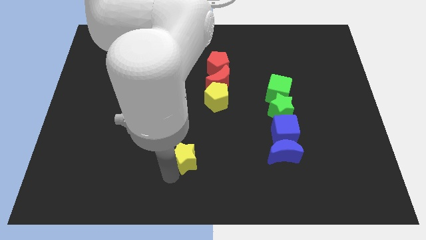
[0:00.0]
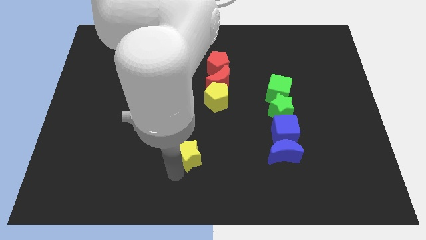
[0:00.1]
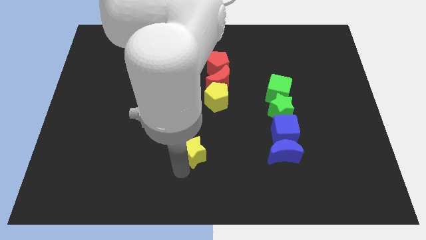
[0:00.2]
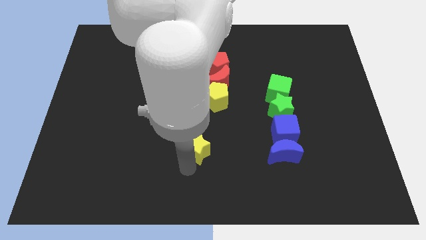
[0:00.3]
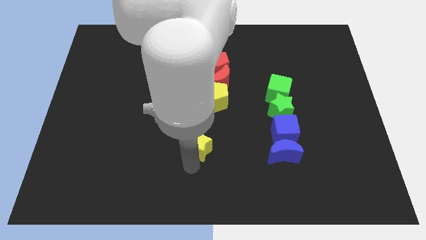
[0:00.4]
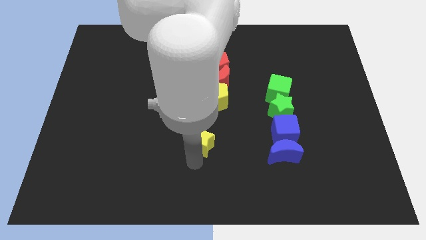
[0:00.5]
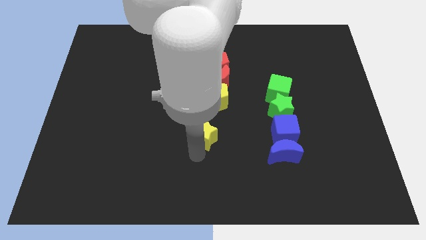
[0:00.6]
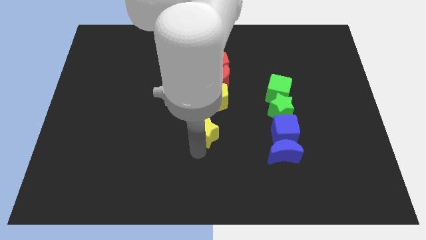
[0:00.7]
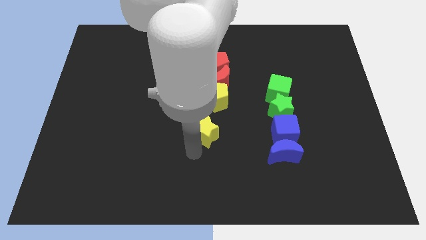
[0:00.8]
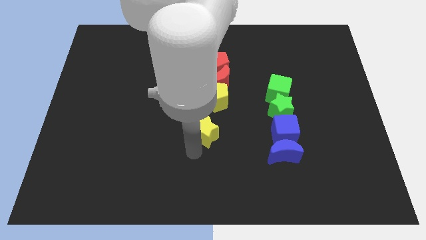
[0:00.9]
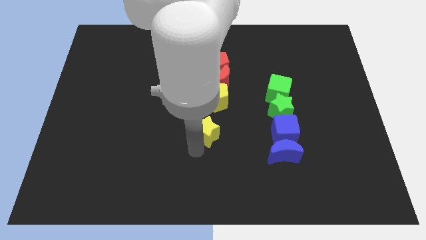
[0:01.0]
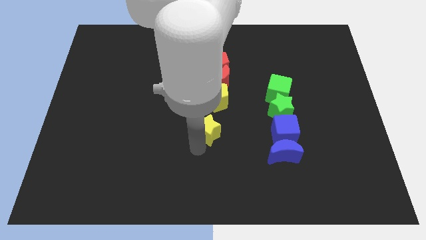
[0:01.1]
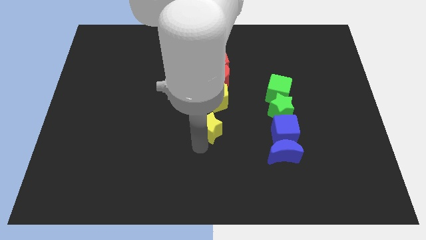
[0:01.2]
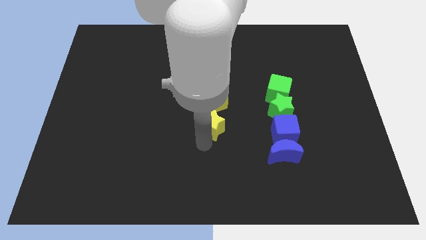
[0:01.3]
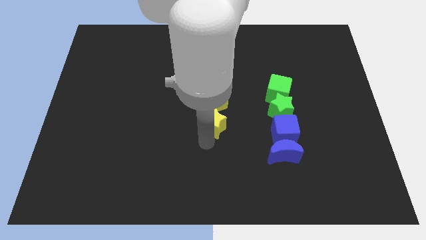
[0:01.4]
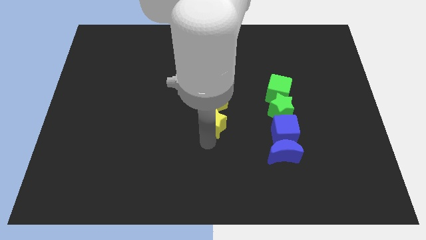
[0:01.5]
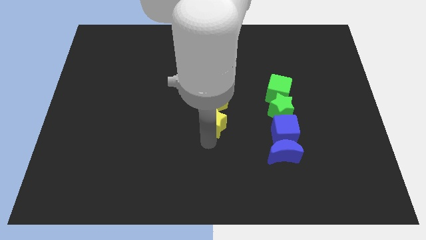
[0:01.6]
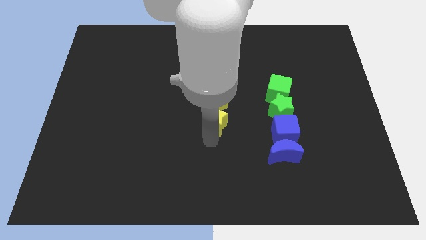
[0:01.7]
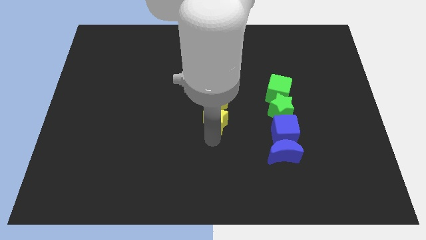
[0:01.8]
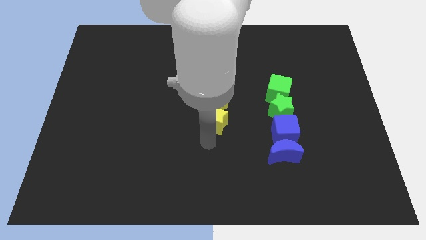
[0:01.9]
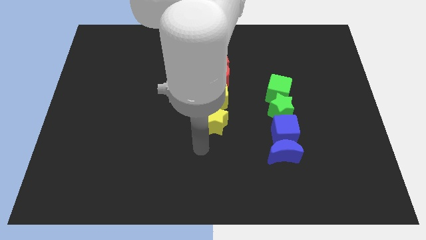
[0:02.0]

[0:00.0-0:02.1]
place the yellow star below the yellow pentagon

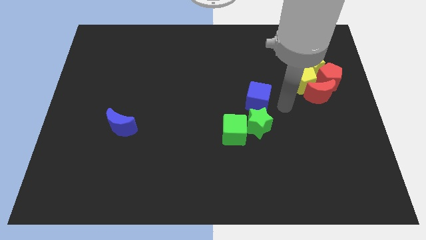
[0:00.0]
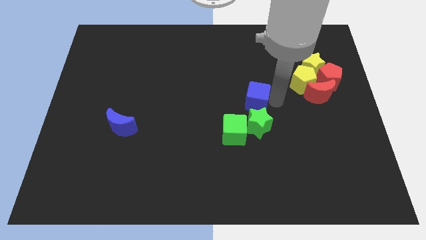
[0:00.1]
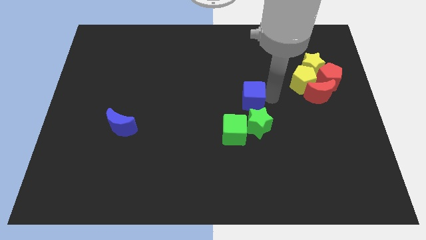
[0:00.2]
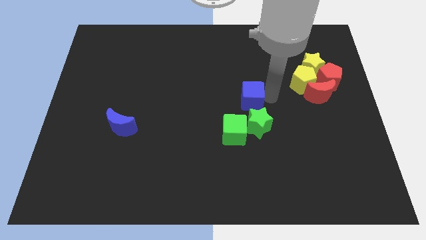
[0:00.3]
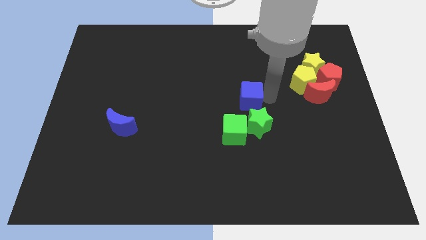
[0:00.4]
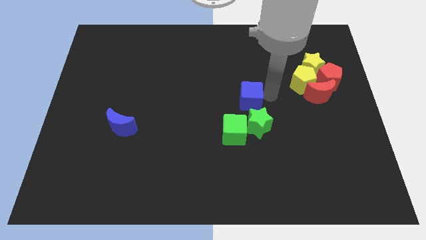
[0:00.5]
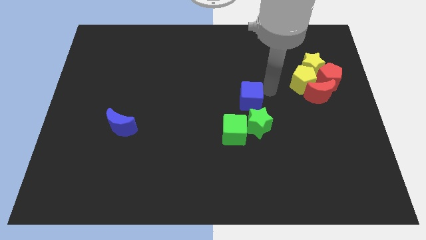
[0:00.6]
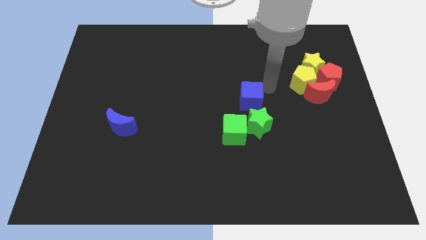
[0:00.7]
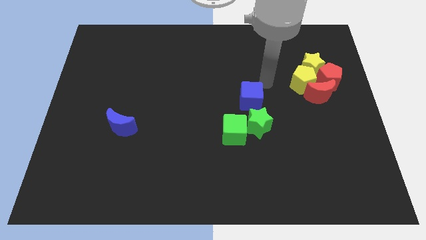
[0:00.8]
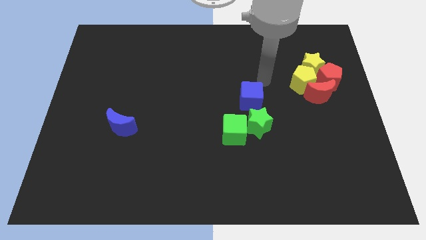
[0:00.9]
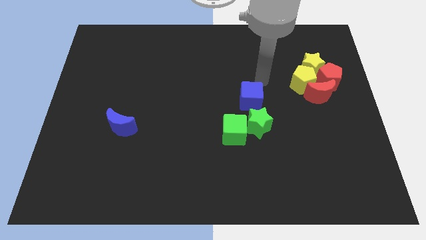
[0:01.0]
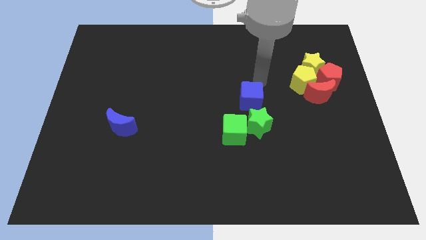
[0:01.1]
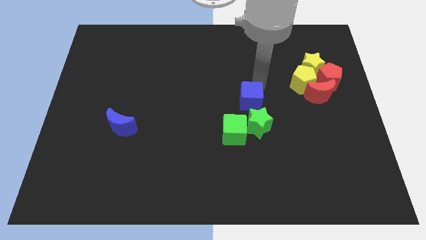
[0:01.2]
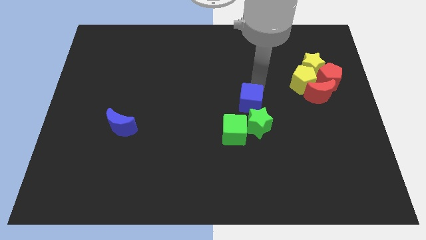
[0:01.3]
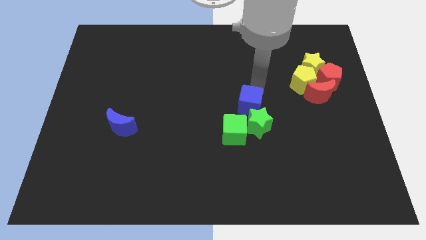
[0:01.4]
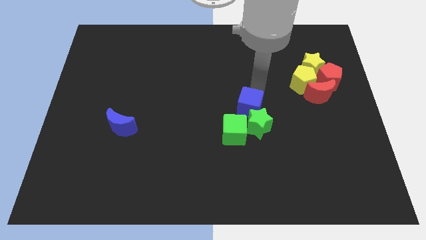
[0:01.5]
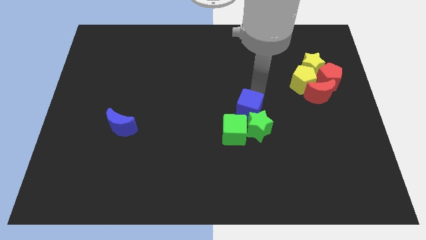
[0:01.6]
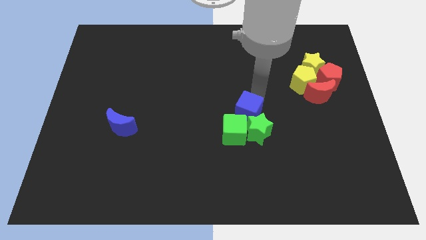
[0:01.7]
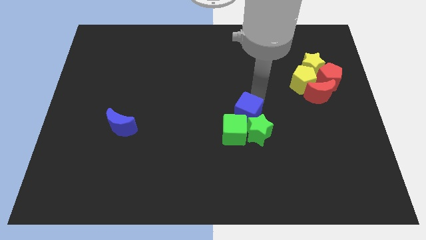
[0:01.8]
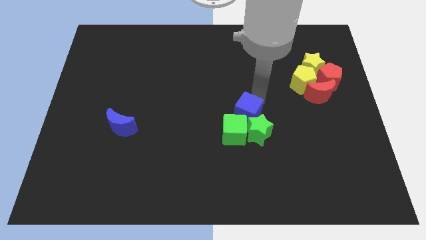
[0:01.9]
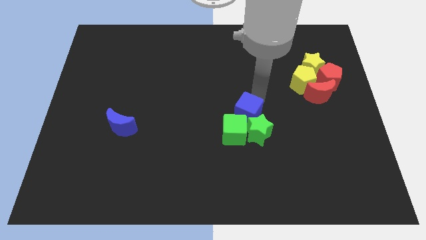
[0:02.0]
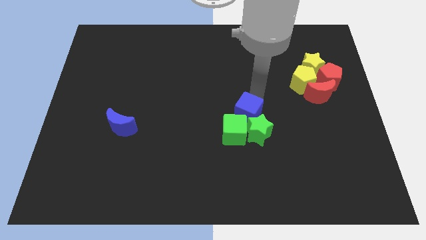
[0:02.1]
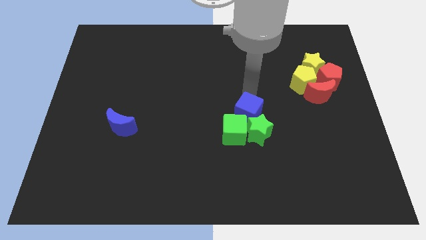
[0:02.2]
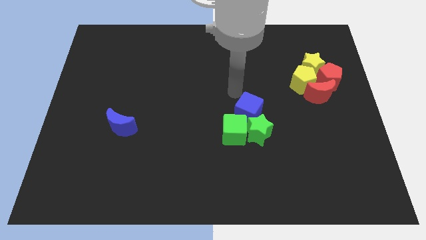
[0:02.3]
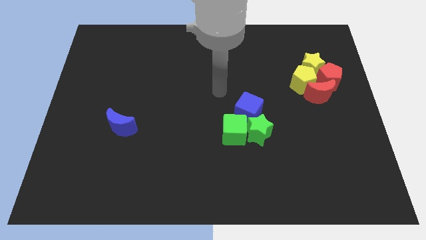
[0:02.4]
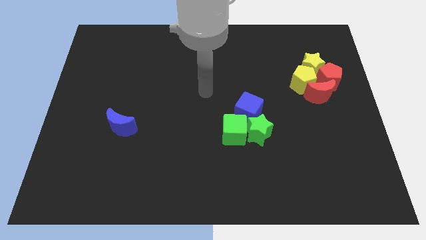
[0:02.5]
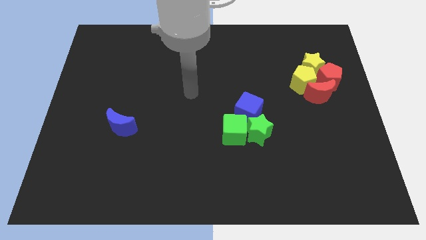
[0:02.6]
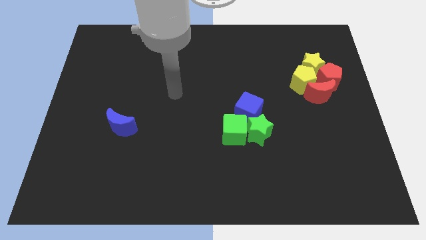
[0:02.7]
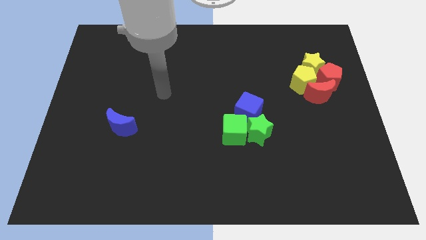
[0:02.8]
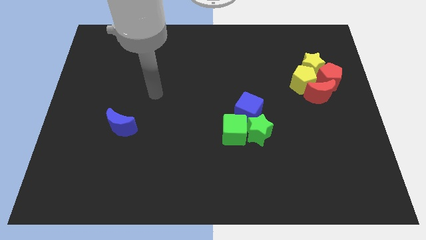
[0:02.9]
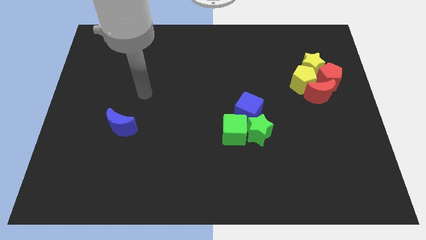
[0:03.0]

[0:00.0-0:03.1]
move blue cube into green star

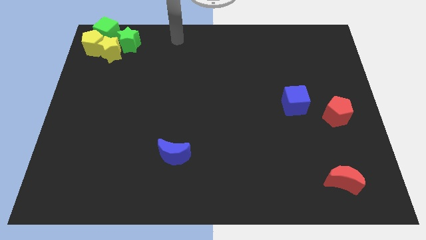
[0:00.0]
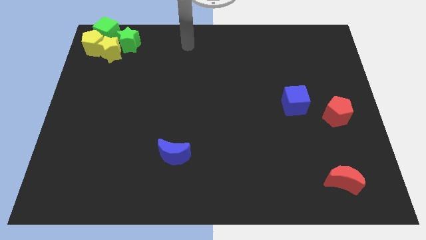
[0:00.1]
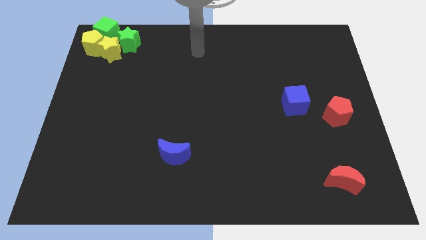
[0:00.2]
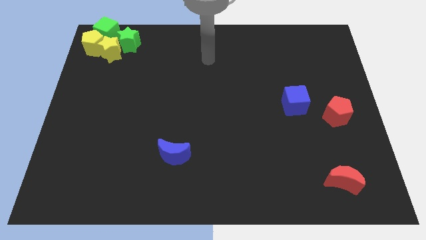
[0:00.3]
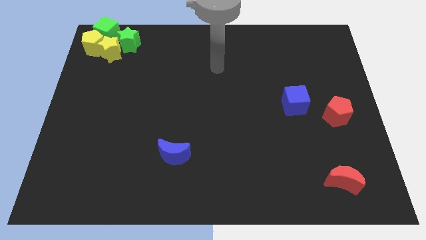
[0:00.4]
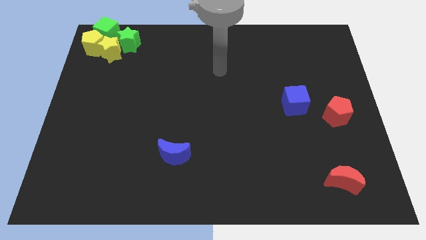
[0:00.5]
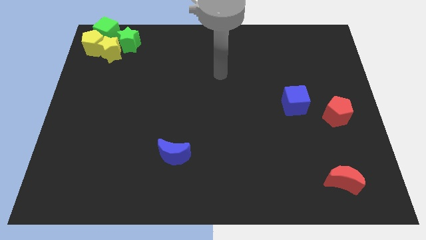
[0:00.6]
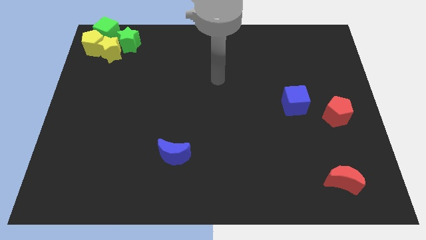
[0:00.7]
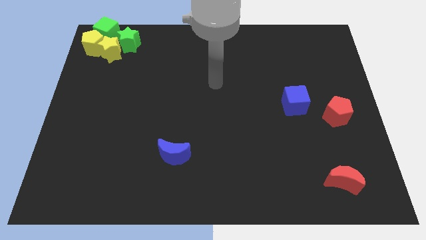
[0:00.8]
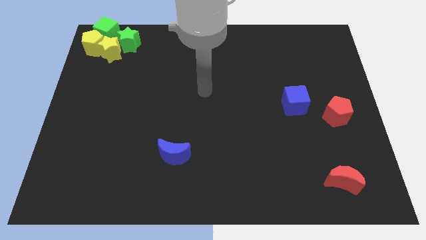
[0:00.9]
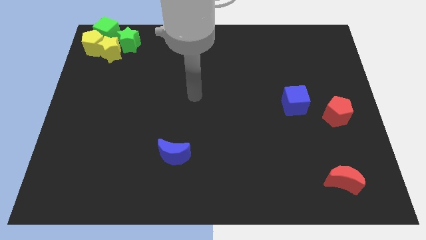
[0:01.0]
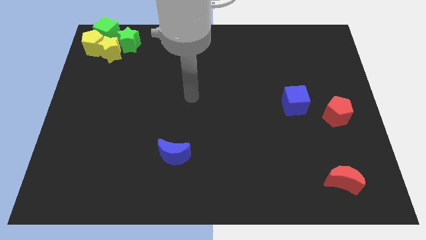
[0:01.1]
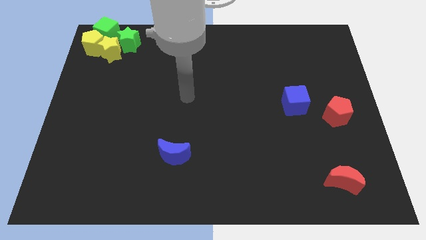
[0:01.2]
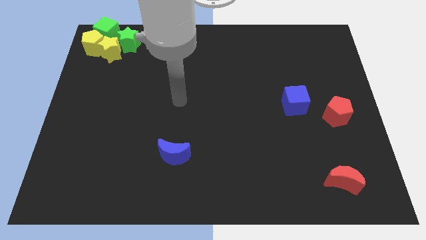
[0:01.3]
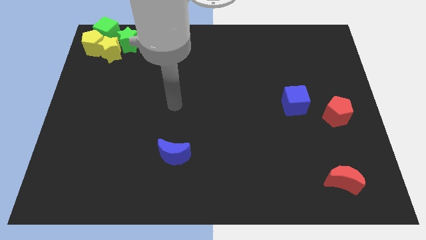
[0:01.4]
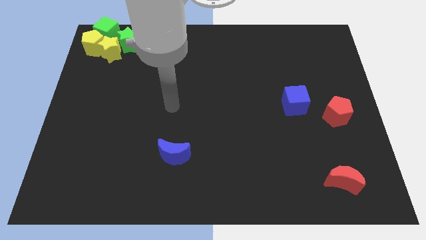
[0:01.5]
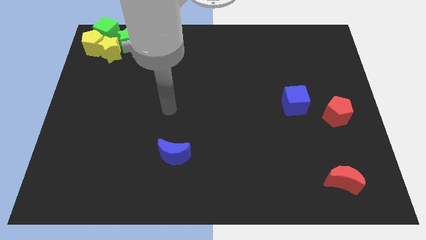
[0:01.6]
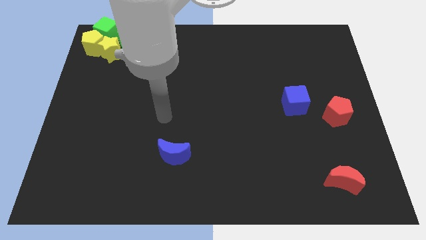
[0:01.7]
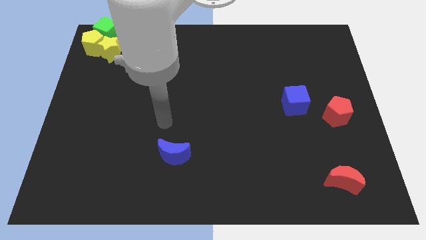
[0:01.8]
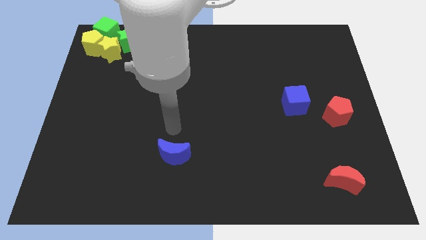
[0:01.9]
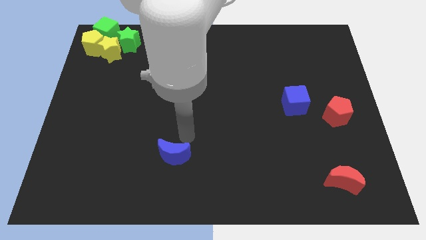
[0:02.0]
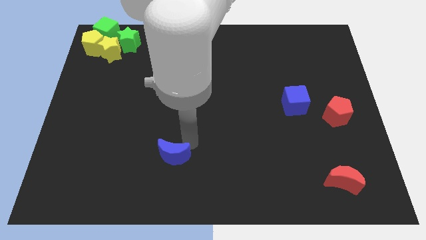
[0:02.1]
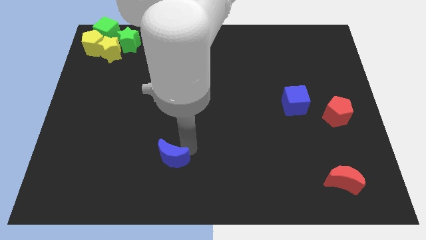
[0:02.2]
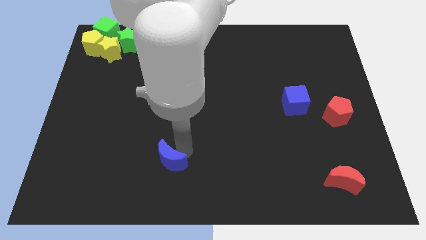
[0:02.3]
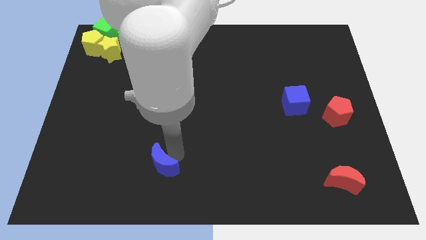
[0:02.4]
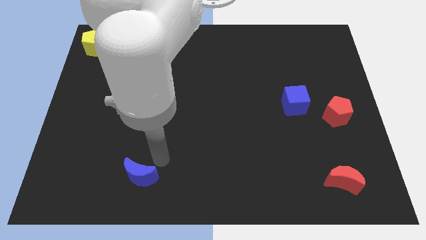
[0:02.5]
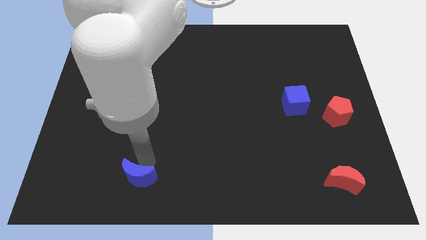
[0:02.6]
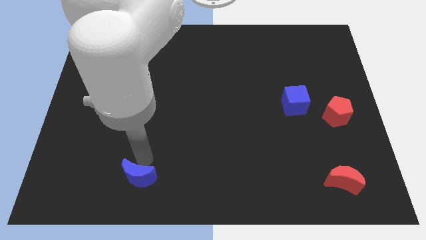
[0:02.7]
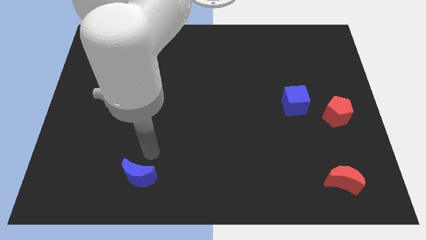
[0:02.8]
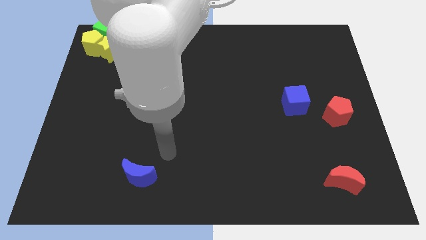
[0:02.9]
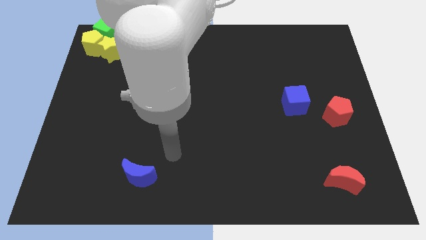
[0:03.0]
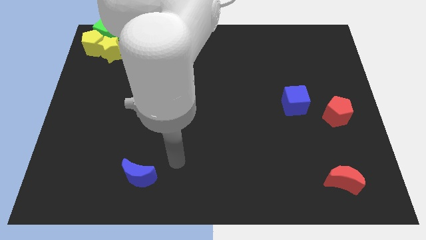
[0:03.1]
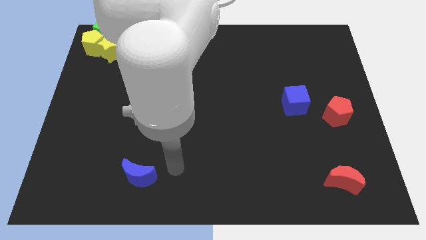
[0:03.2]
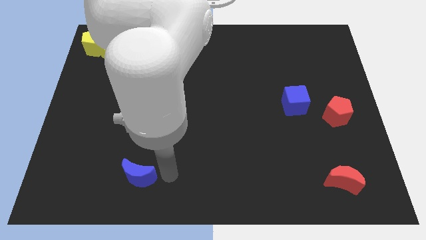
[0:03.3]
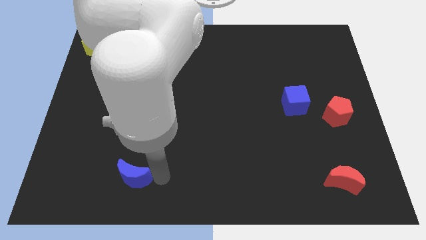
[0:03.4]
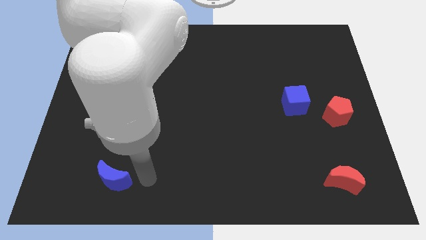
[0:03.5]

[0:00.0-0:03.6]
push the blue crescent towards the bottom left

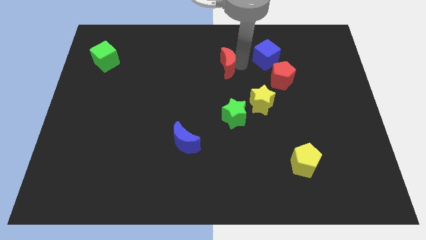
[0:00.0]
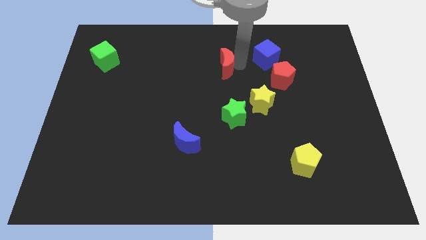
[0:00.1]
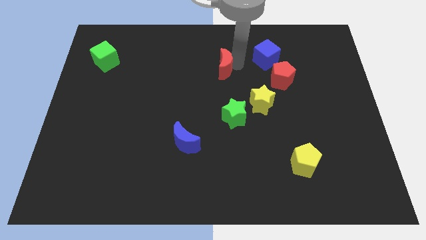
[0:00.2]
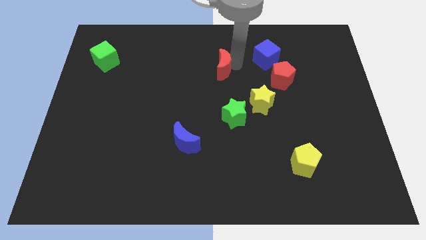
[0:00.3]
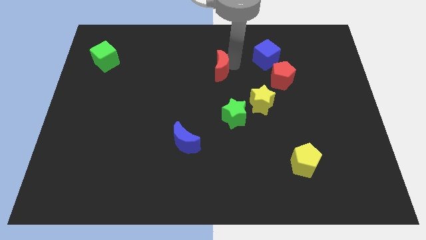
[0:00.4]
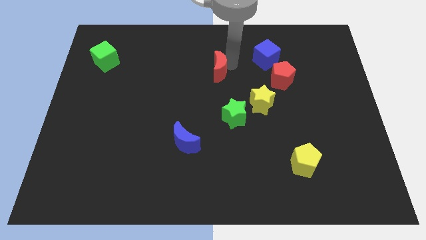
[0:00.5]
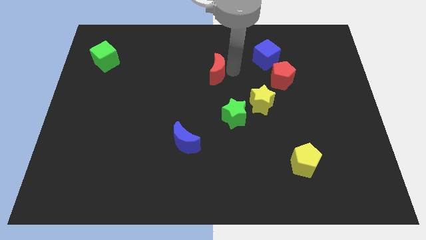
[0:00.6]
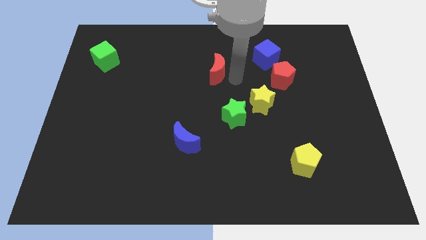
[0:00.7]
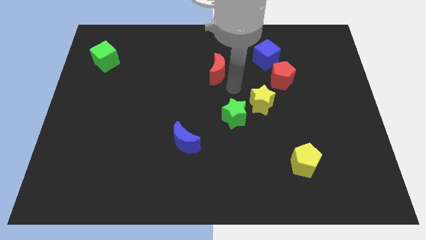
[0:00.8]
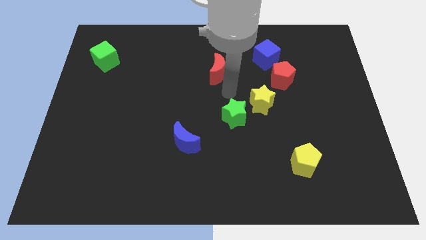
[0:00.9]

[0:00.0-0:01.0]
move the red crescent slightly to the left
